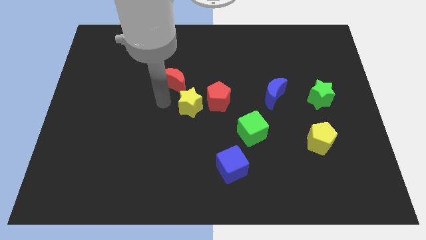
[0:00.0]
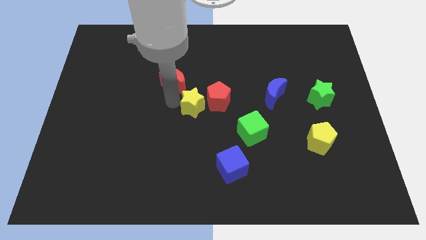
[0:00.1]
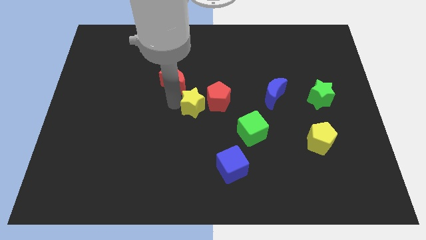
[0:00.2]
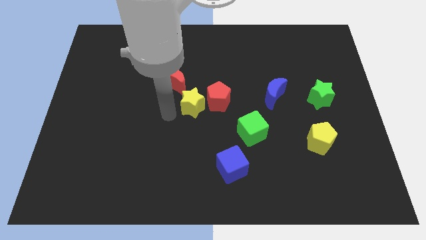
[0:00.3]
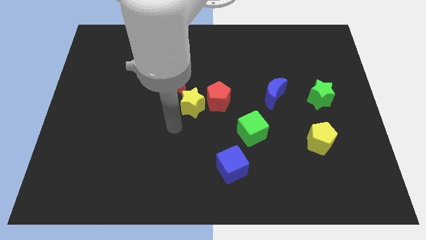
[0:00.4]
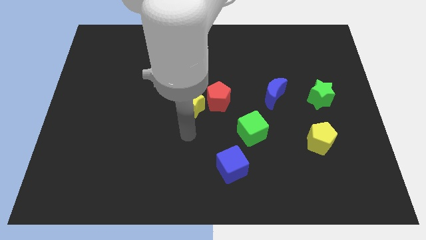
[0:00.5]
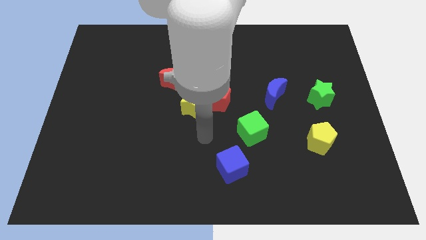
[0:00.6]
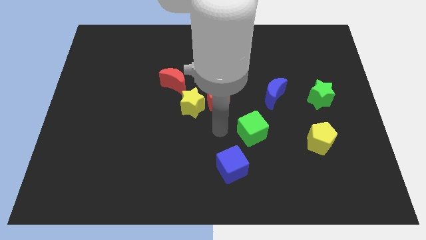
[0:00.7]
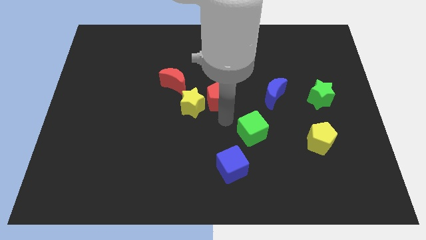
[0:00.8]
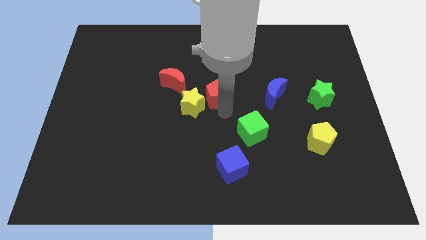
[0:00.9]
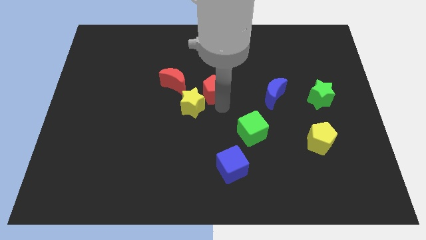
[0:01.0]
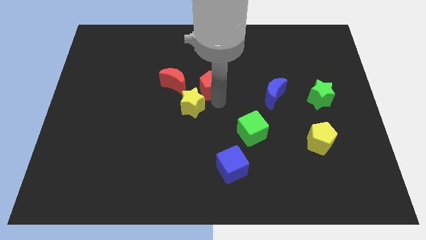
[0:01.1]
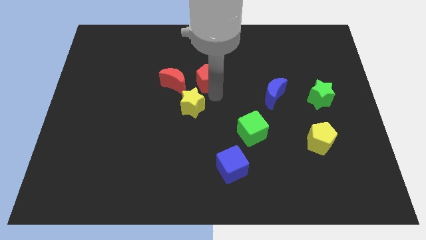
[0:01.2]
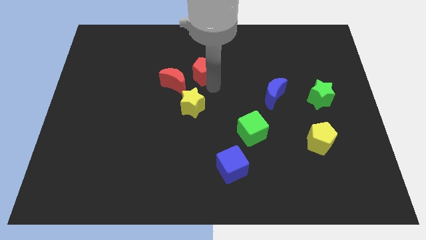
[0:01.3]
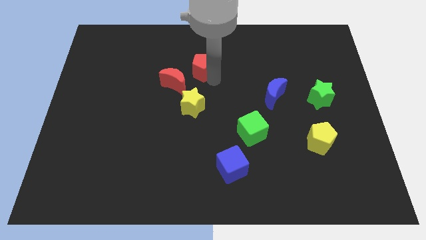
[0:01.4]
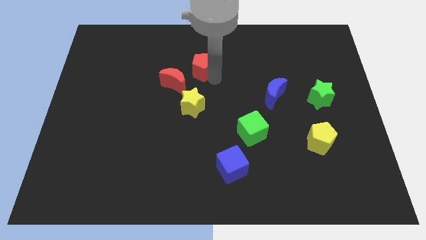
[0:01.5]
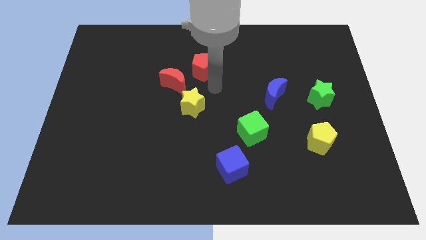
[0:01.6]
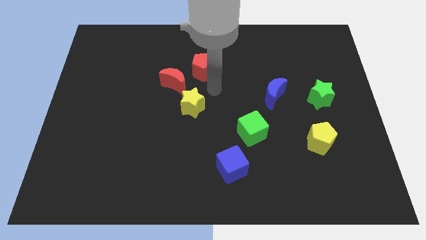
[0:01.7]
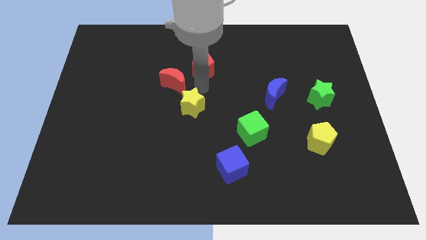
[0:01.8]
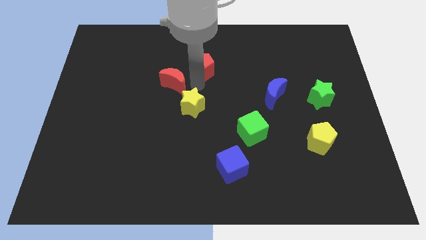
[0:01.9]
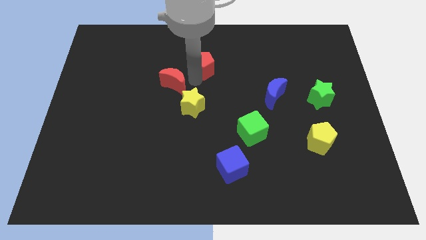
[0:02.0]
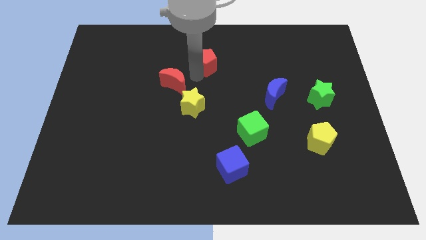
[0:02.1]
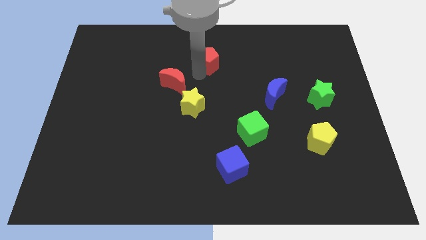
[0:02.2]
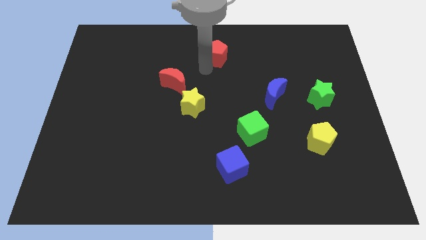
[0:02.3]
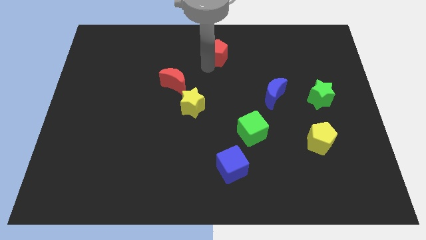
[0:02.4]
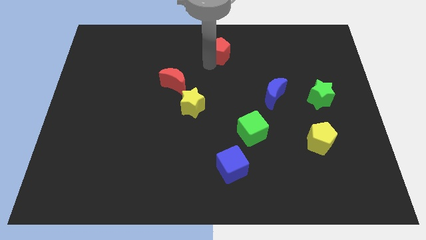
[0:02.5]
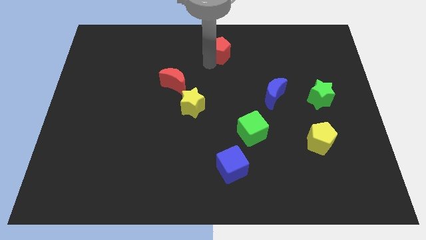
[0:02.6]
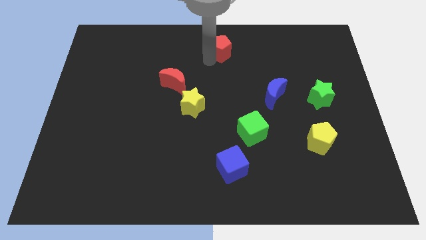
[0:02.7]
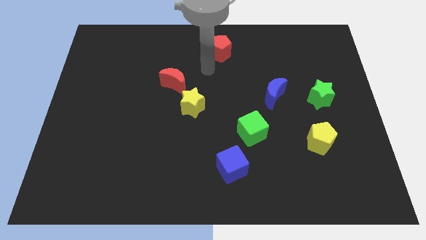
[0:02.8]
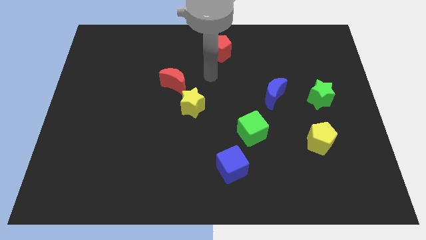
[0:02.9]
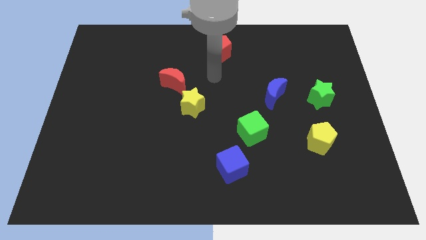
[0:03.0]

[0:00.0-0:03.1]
separate red pentagon from yellow star

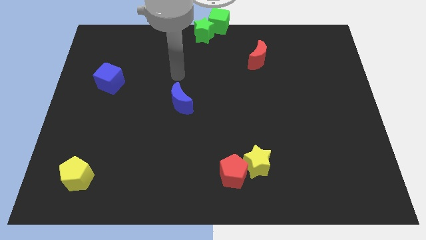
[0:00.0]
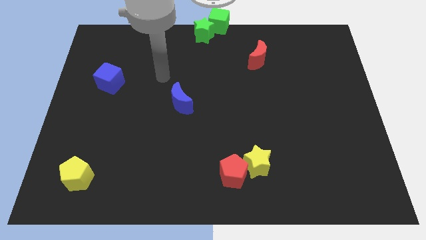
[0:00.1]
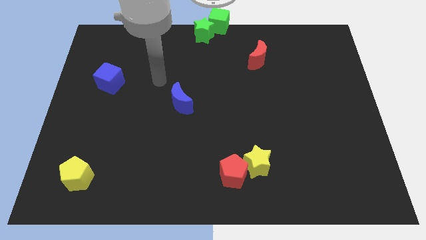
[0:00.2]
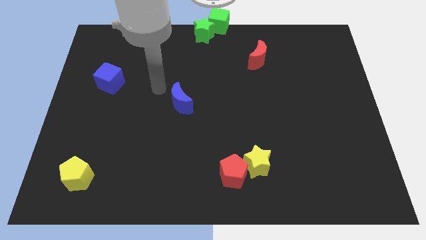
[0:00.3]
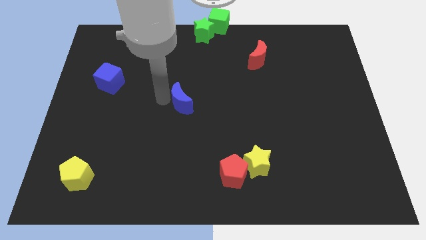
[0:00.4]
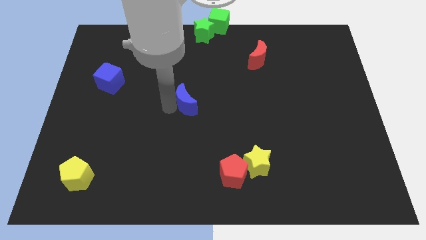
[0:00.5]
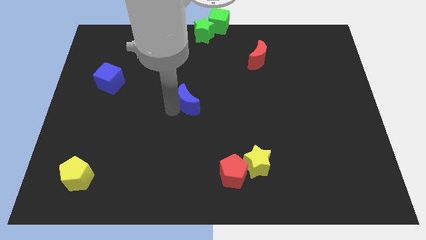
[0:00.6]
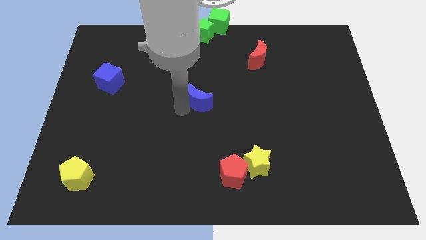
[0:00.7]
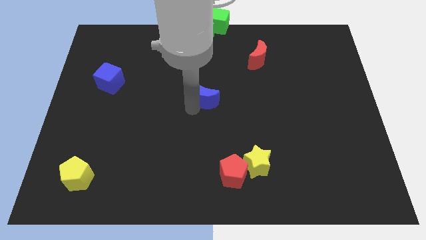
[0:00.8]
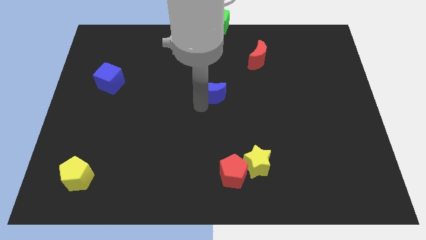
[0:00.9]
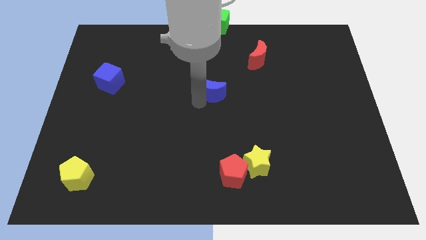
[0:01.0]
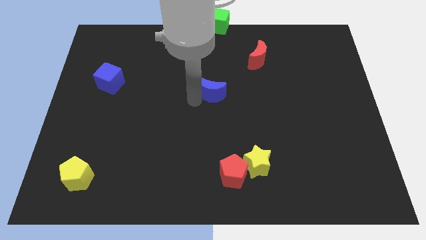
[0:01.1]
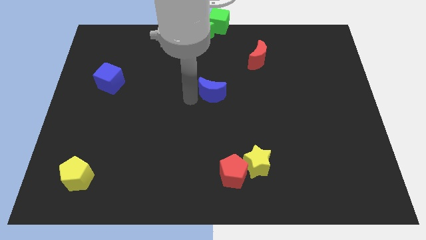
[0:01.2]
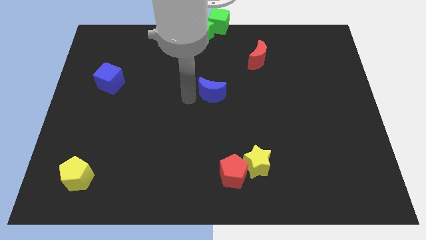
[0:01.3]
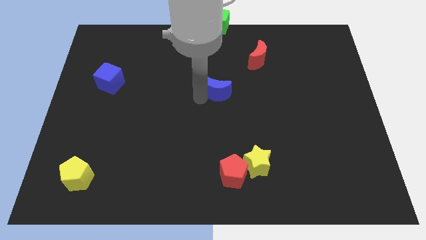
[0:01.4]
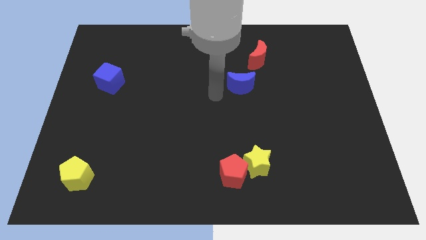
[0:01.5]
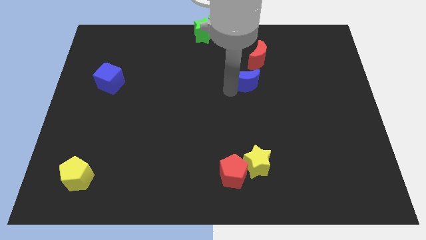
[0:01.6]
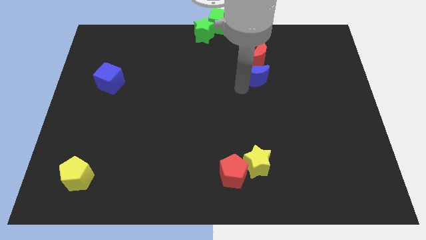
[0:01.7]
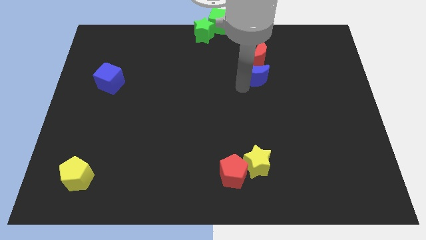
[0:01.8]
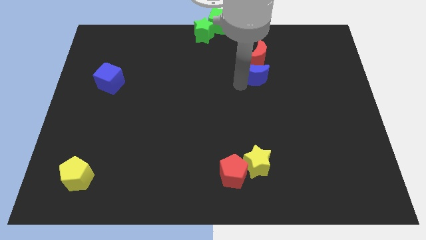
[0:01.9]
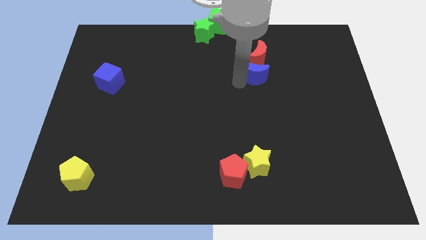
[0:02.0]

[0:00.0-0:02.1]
place blue moon to the bottom of the red moon

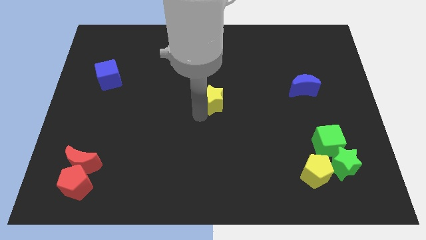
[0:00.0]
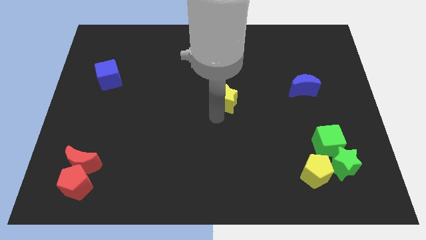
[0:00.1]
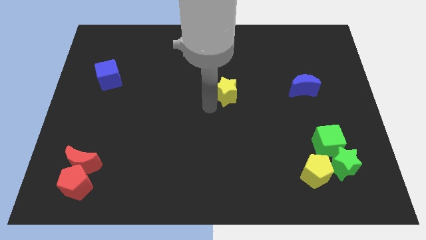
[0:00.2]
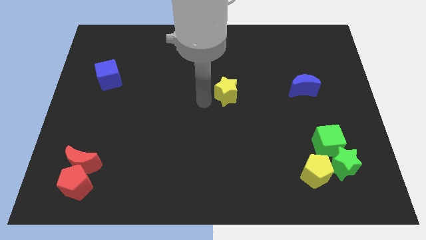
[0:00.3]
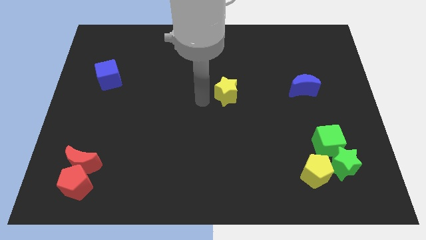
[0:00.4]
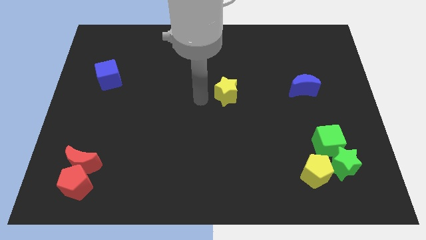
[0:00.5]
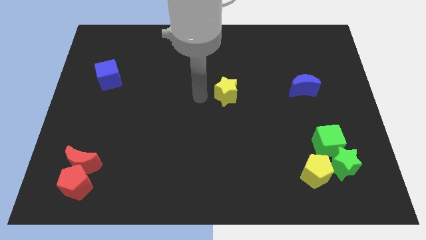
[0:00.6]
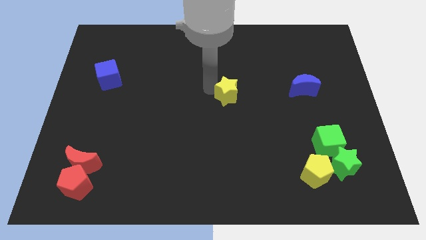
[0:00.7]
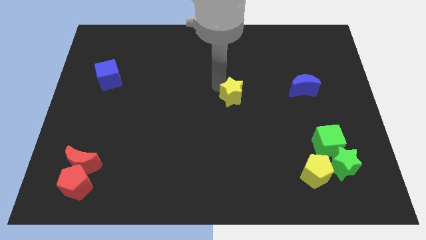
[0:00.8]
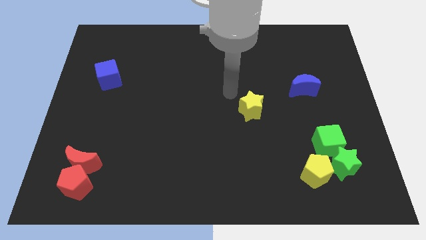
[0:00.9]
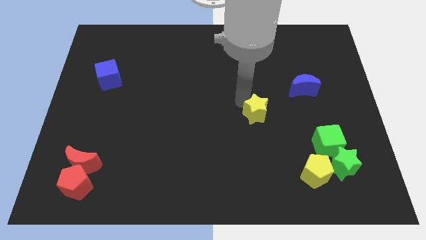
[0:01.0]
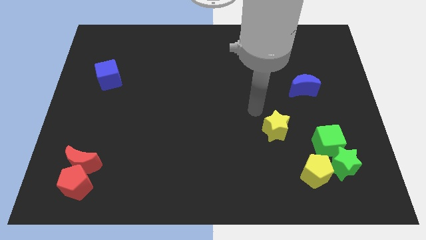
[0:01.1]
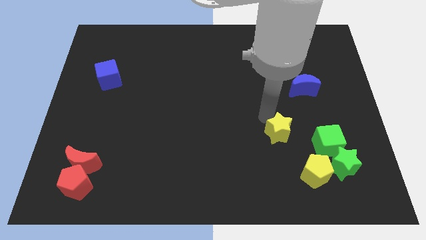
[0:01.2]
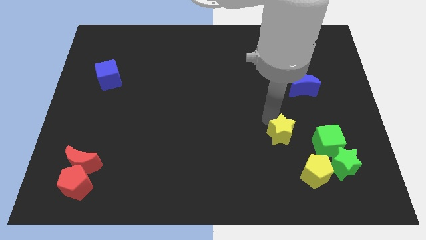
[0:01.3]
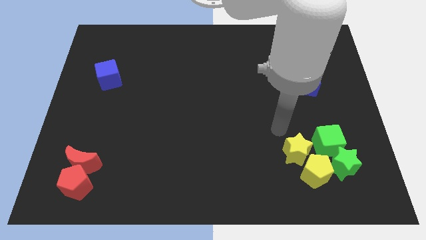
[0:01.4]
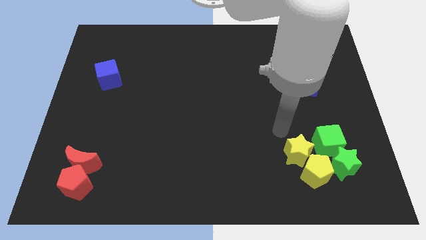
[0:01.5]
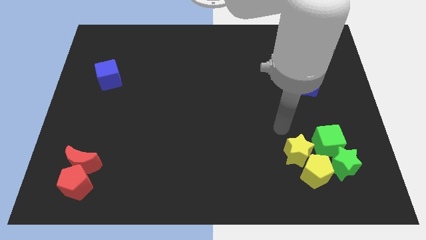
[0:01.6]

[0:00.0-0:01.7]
move the yellow star to the top of the yellow pentagon

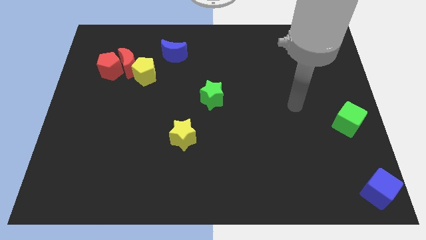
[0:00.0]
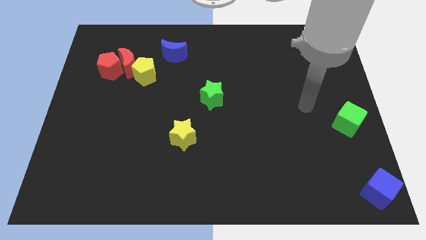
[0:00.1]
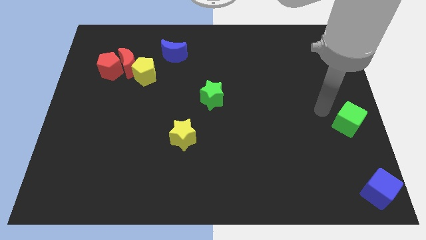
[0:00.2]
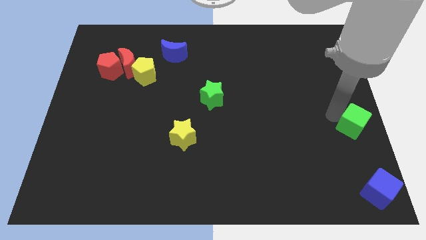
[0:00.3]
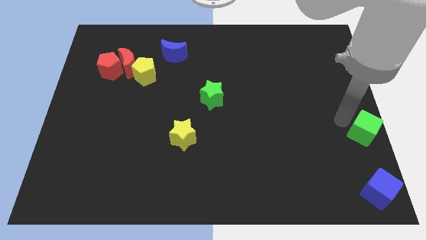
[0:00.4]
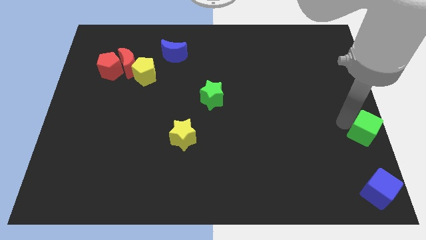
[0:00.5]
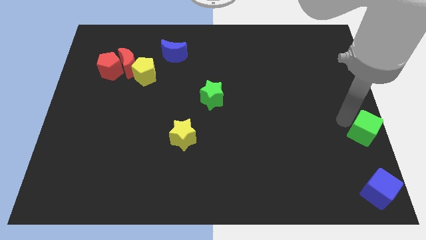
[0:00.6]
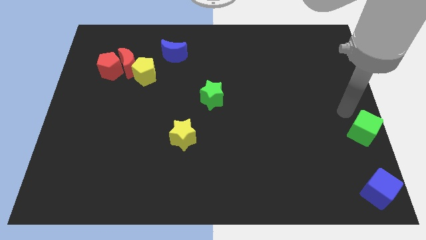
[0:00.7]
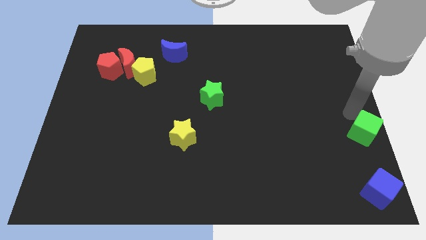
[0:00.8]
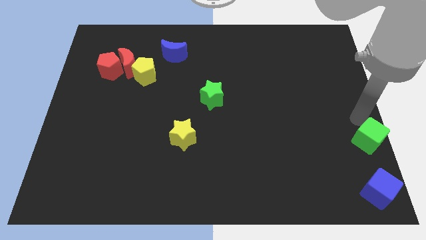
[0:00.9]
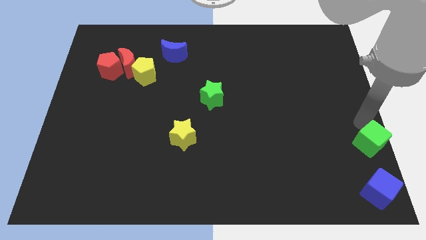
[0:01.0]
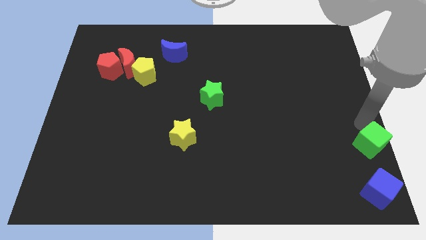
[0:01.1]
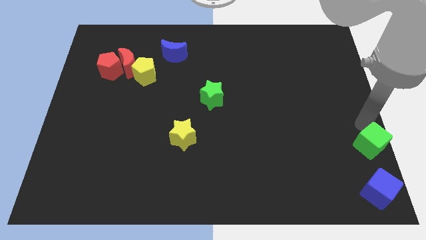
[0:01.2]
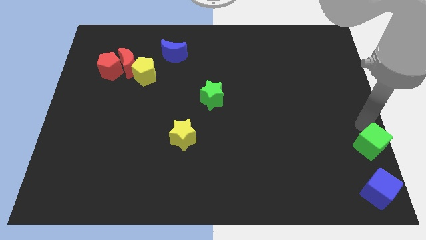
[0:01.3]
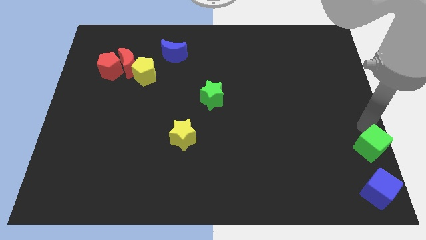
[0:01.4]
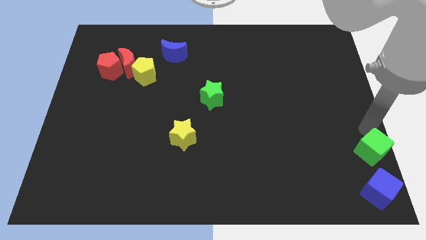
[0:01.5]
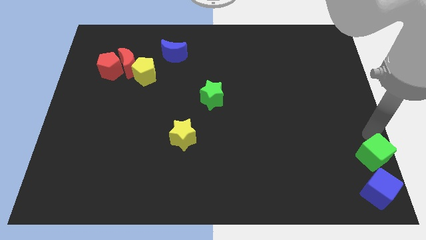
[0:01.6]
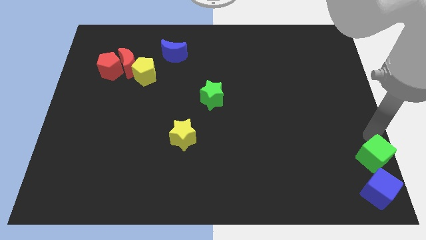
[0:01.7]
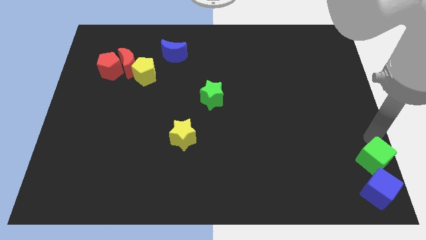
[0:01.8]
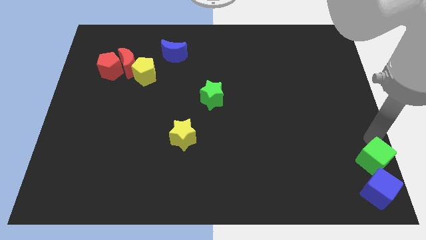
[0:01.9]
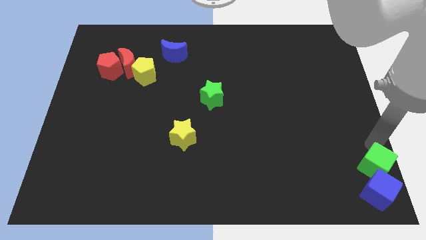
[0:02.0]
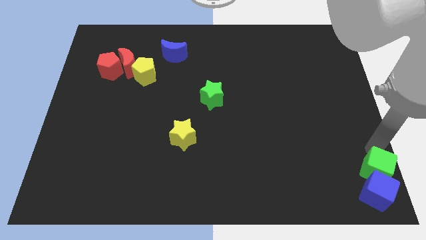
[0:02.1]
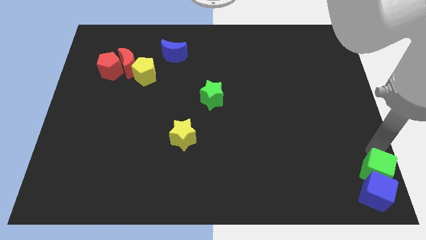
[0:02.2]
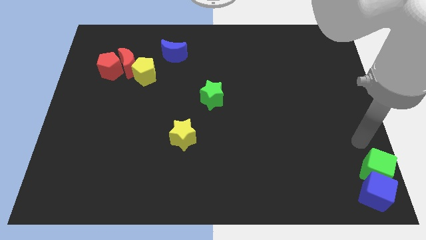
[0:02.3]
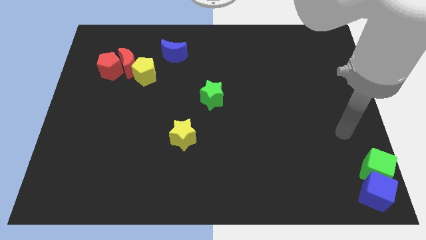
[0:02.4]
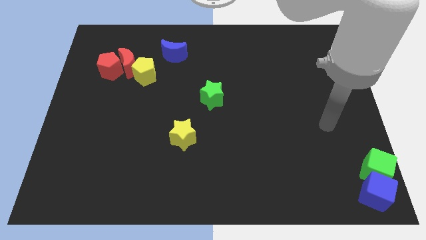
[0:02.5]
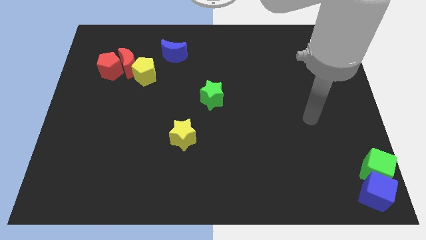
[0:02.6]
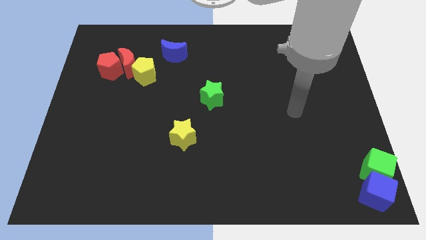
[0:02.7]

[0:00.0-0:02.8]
slightly push the green cube towards the bottom right corner of the board
